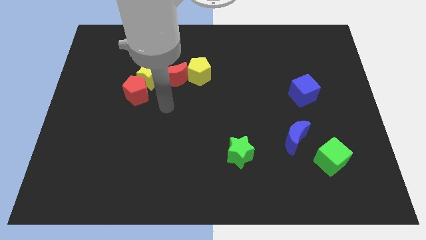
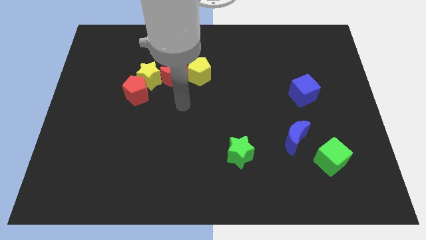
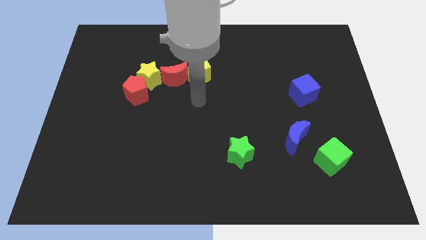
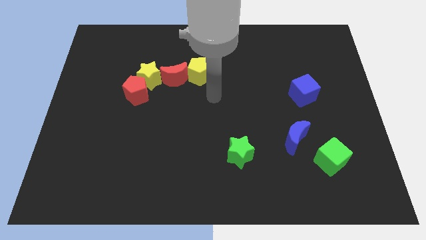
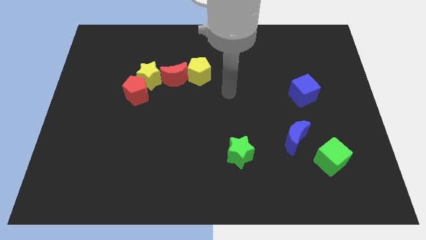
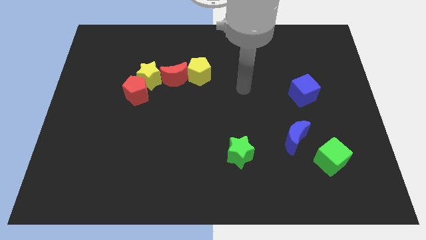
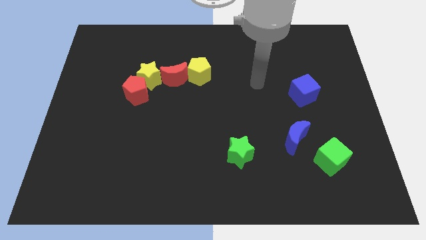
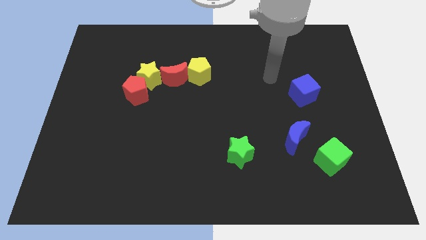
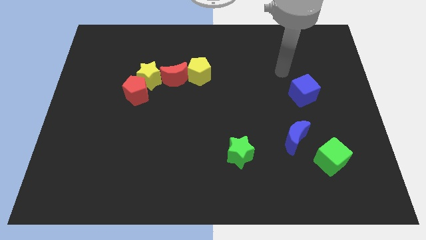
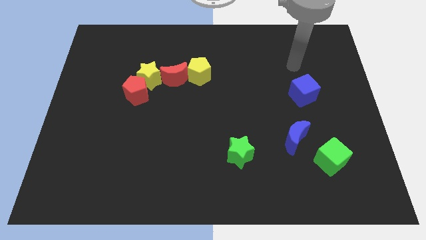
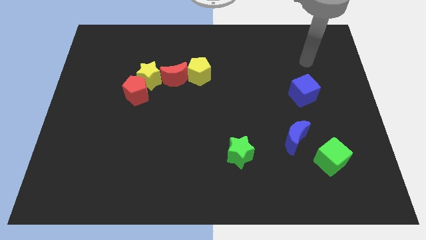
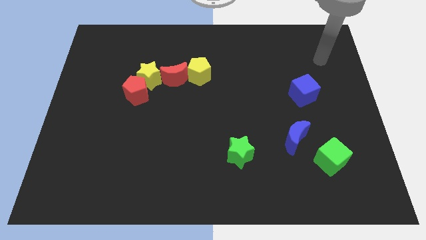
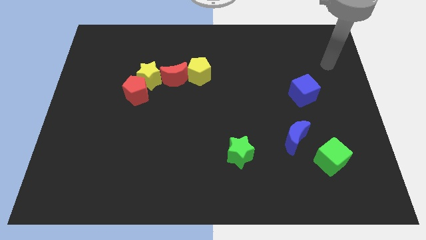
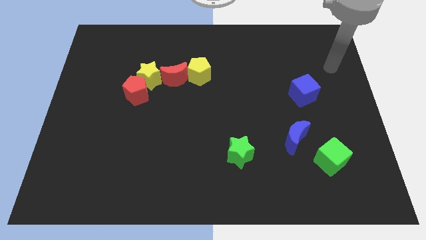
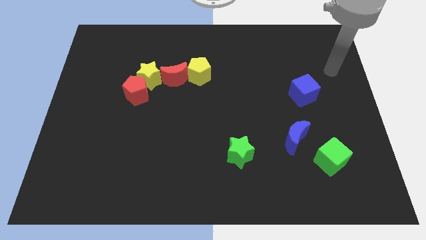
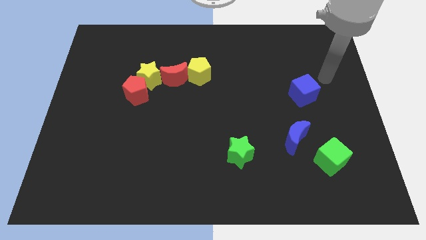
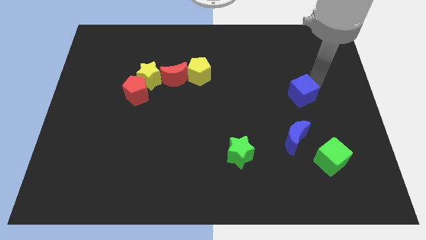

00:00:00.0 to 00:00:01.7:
tap the blue cube

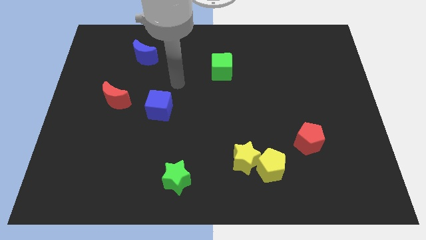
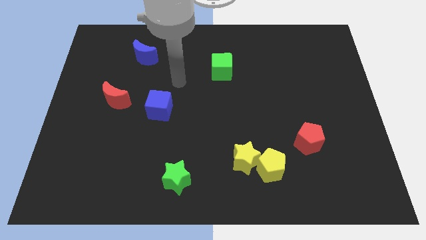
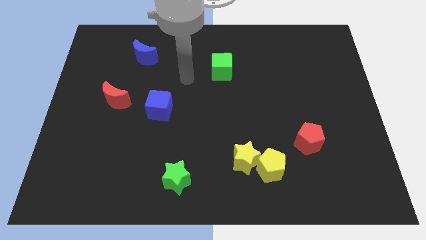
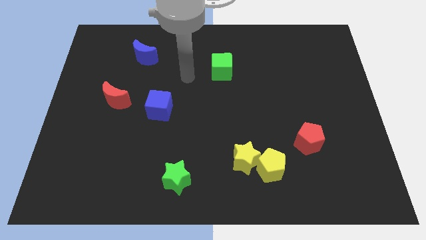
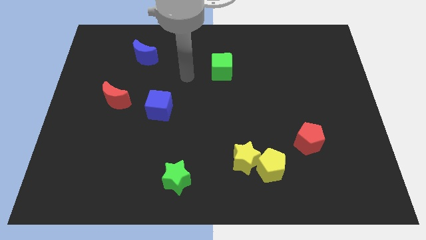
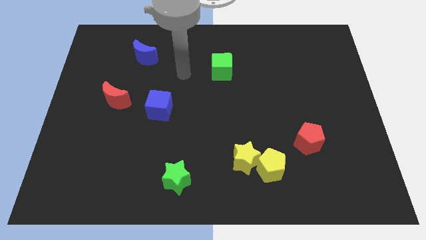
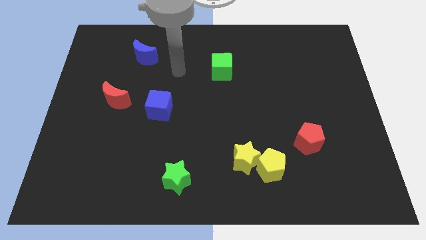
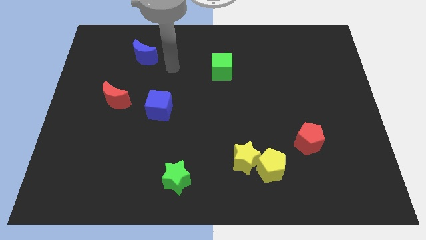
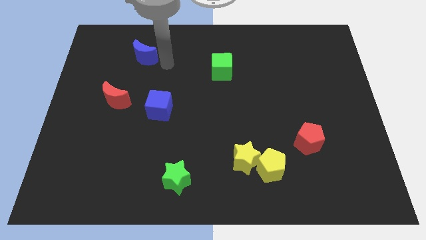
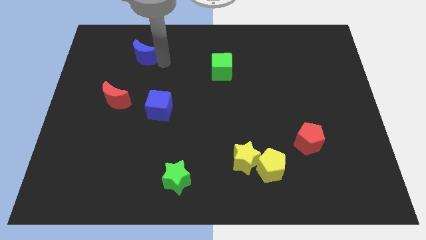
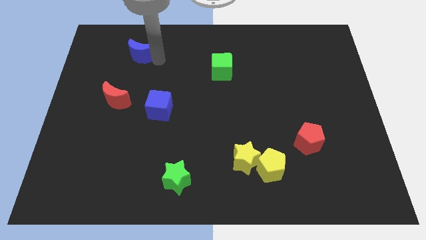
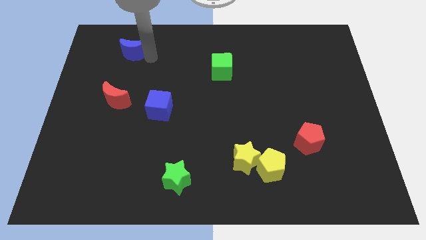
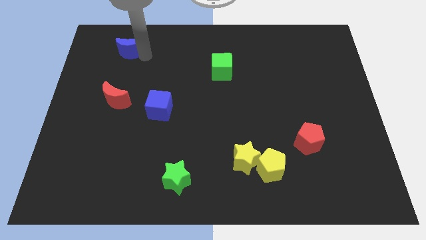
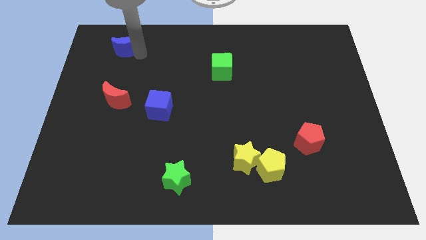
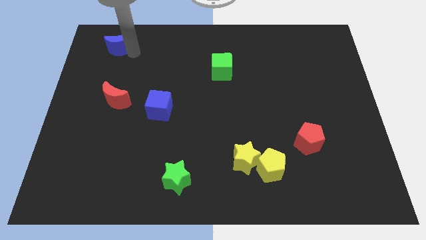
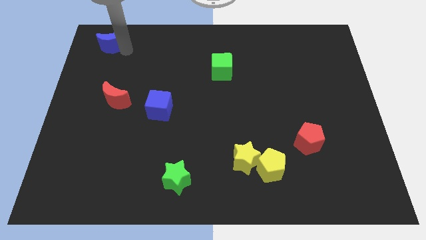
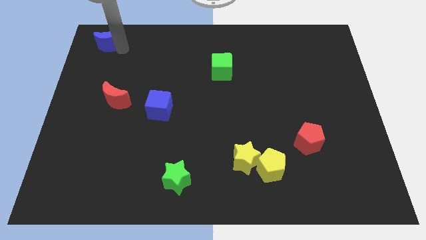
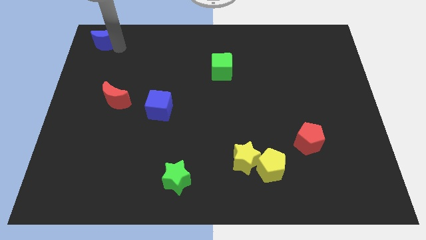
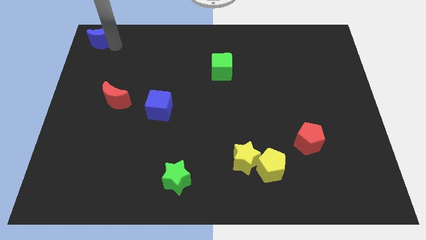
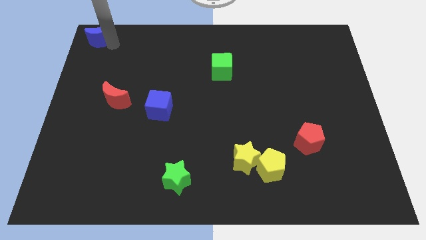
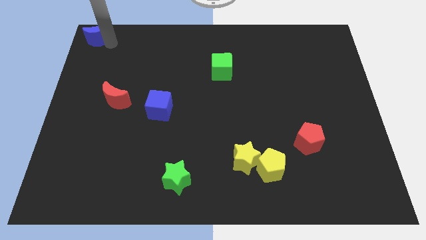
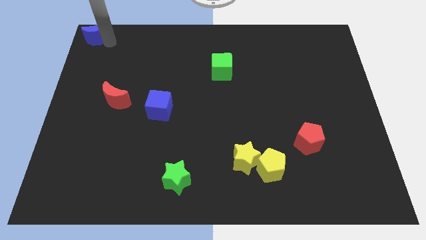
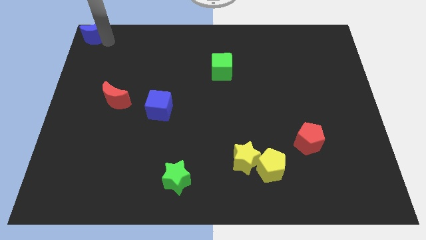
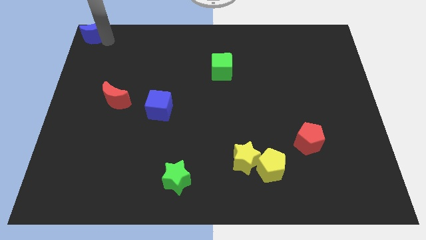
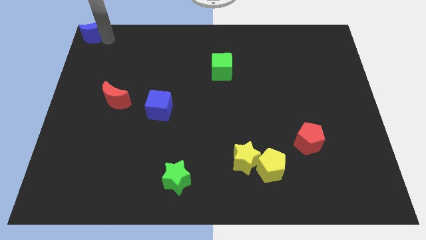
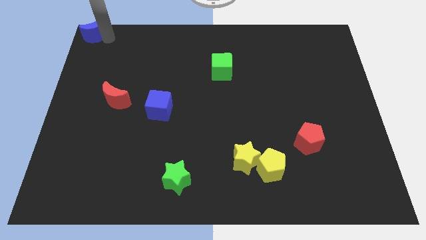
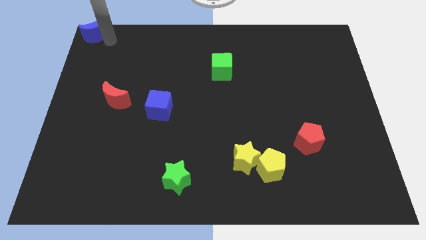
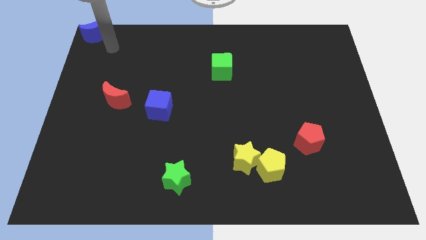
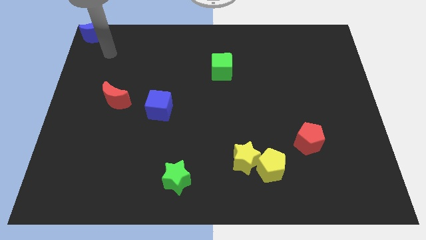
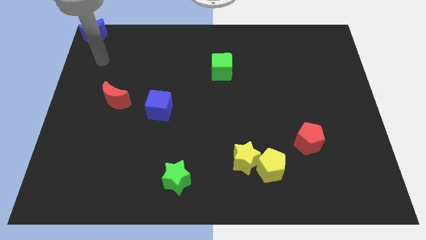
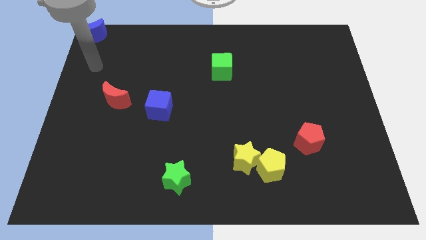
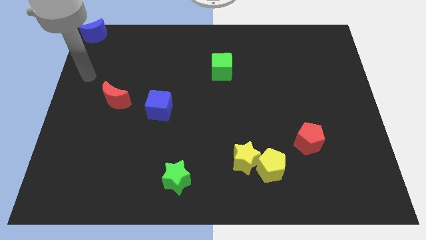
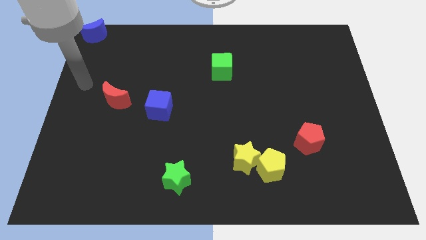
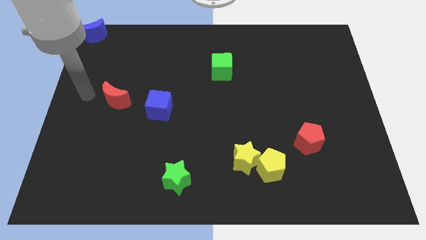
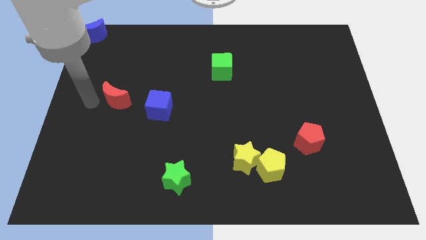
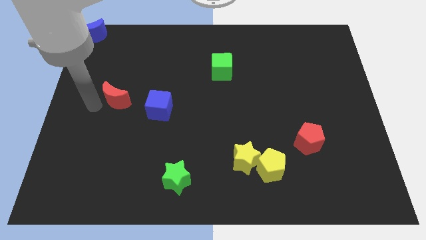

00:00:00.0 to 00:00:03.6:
move the blue crescent to the top left corner of the board

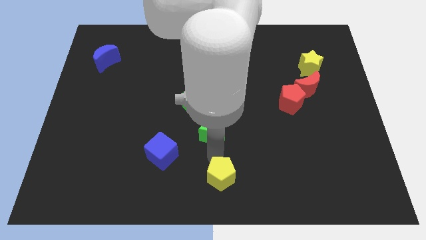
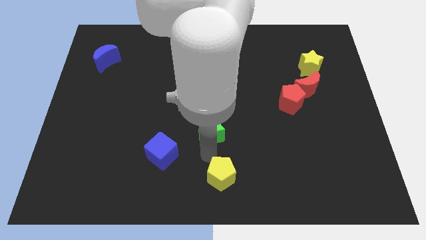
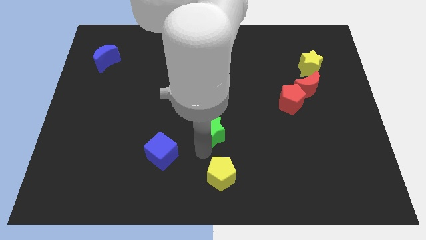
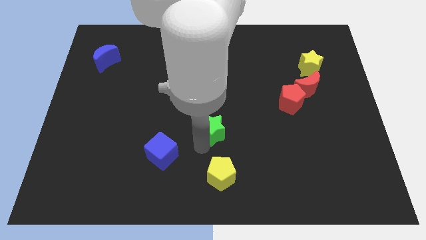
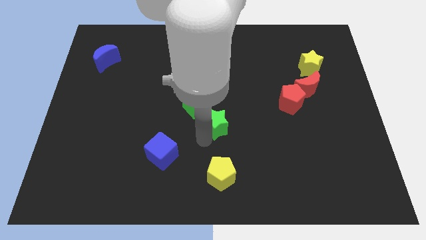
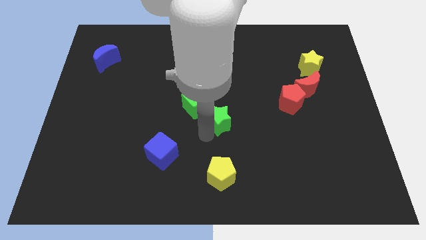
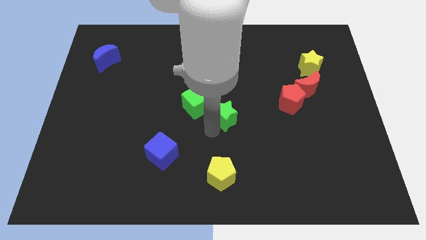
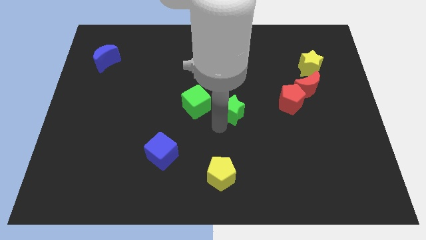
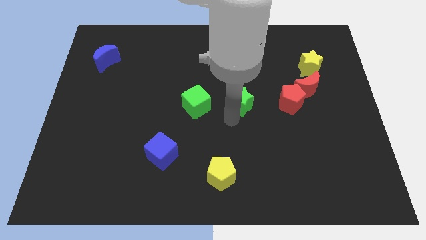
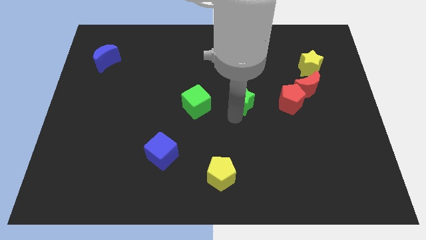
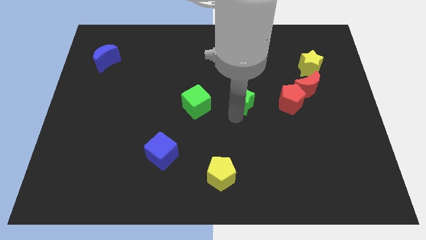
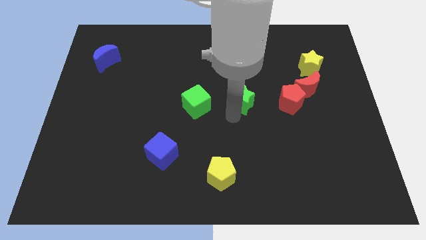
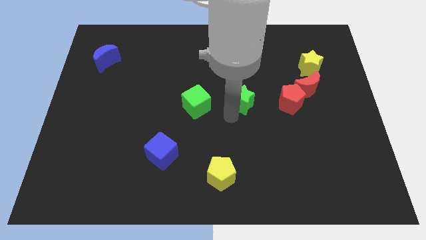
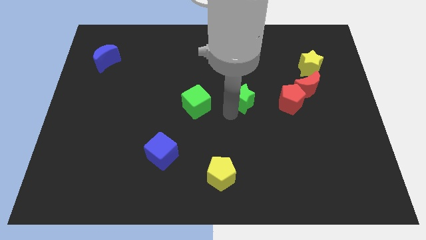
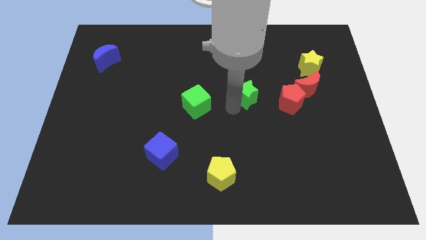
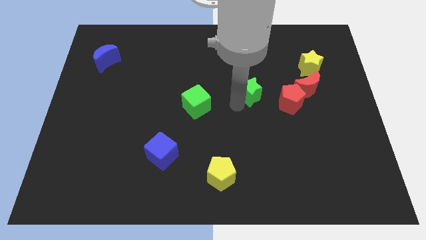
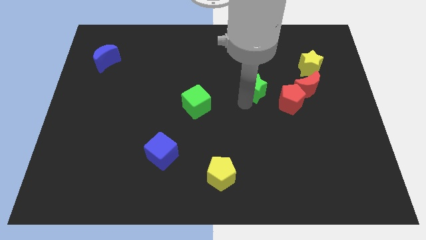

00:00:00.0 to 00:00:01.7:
push the green star parallel to the red pentagon

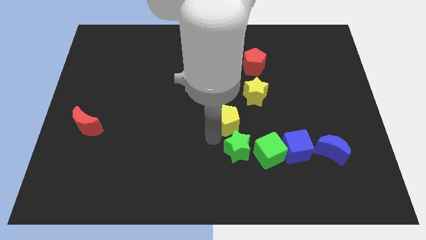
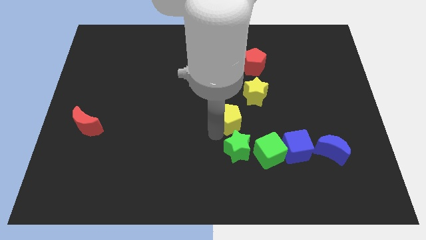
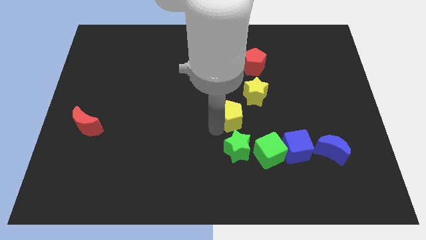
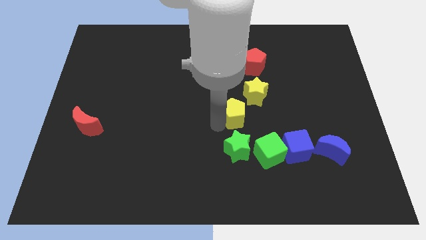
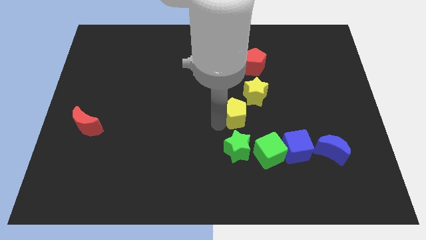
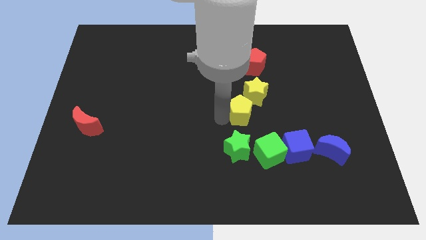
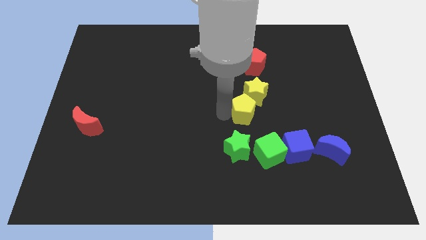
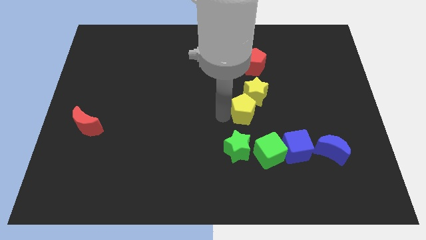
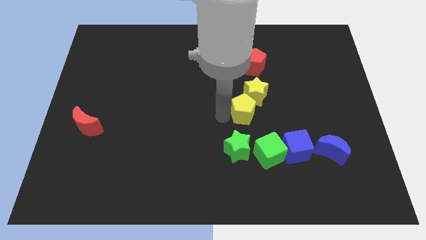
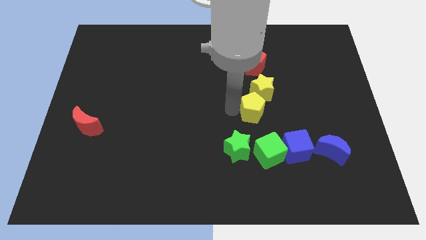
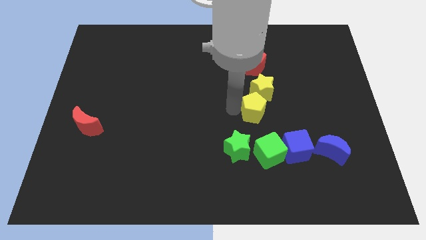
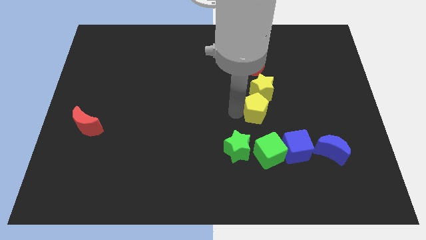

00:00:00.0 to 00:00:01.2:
slide the yellow pentagon into the yellow star

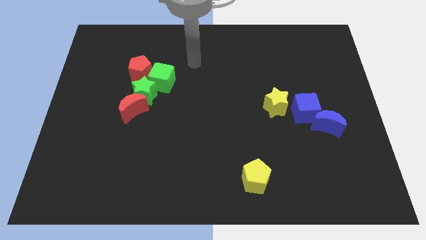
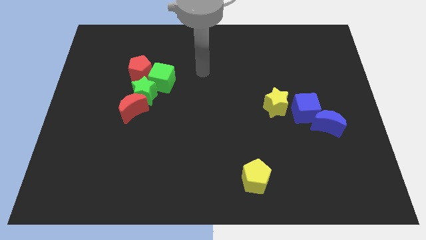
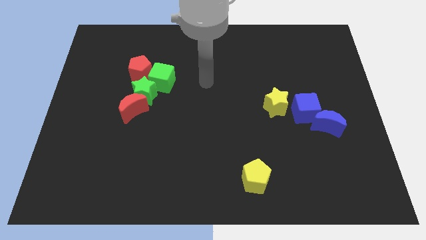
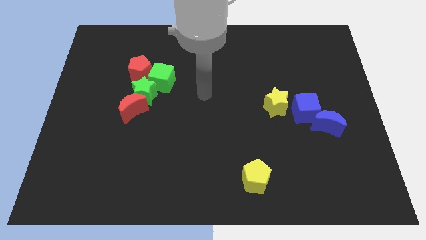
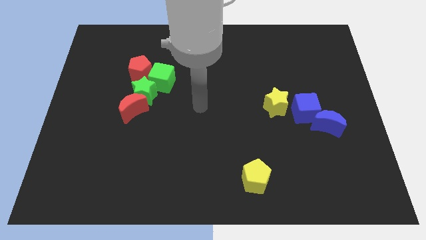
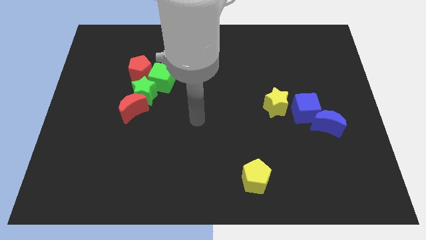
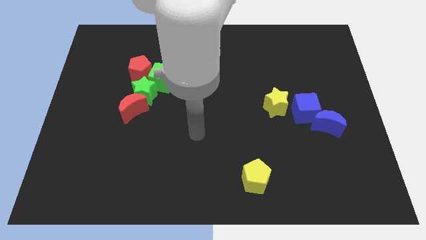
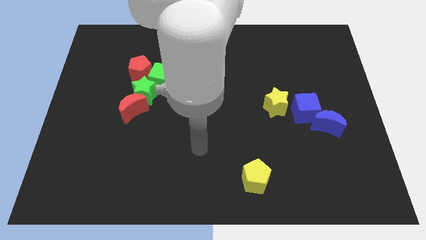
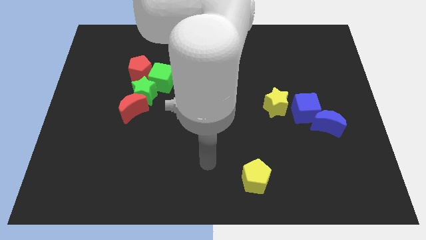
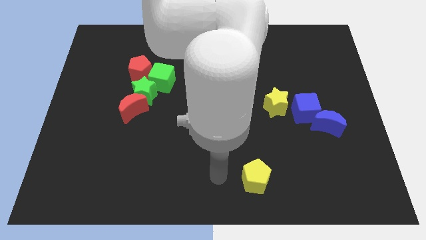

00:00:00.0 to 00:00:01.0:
move the arm towards the yellow pentagon
